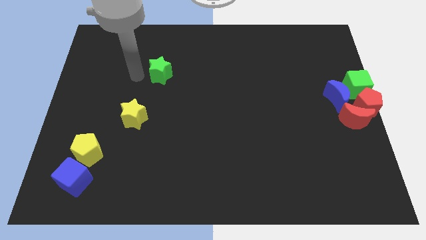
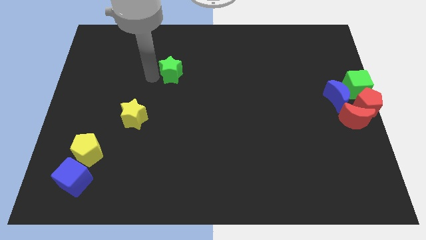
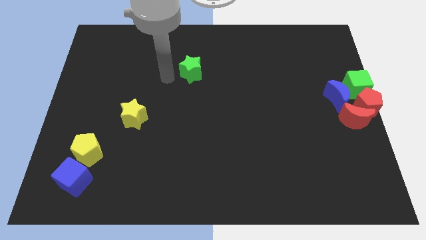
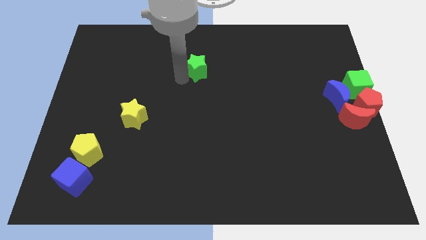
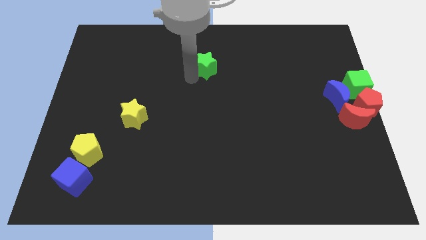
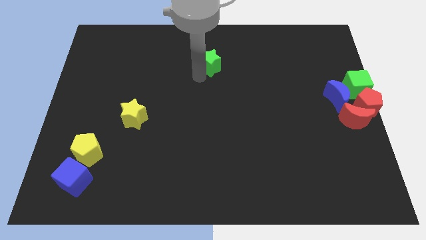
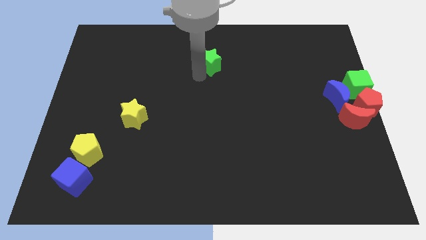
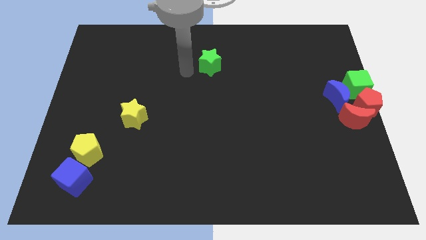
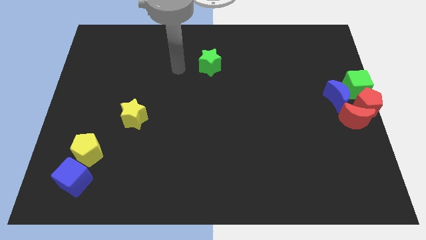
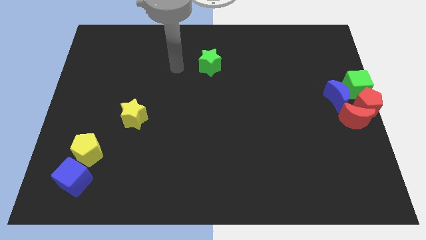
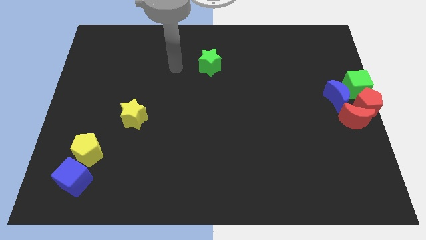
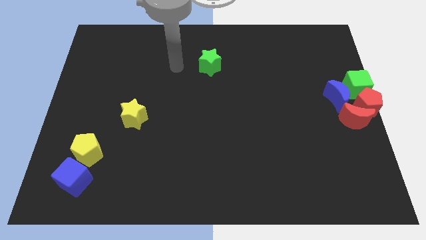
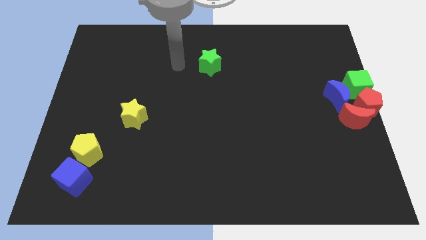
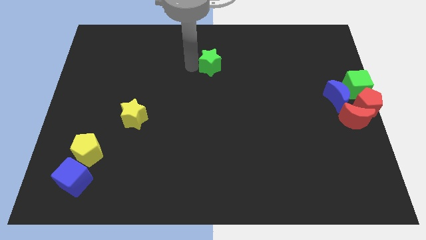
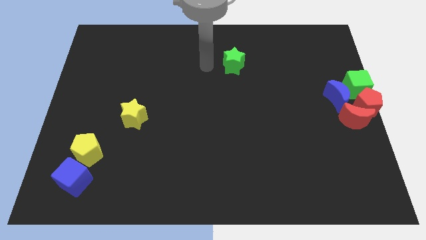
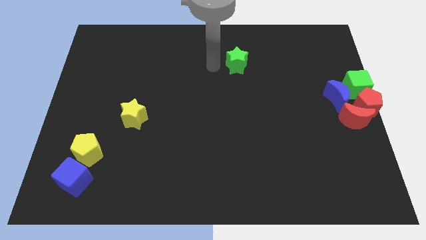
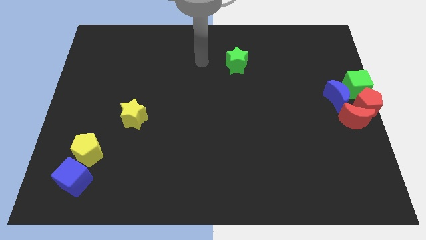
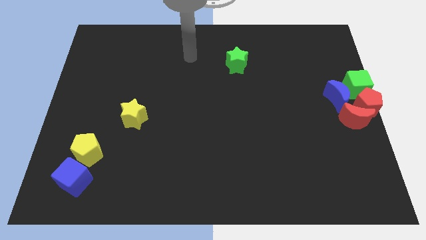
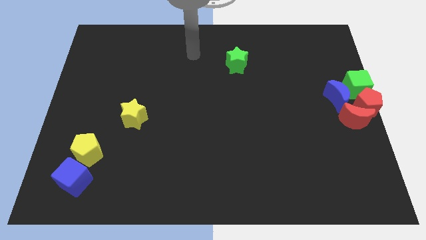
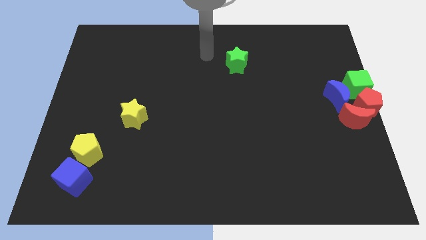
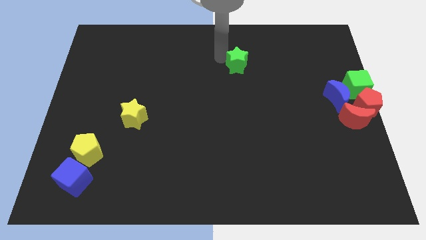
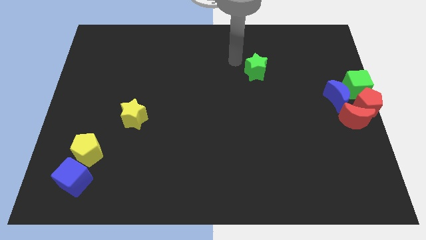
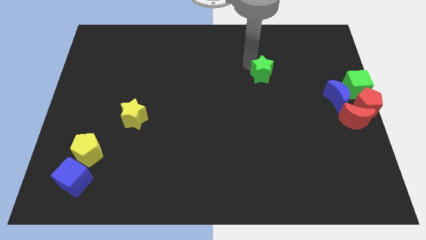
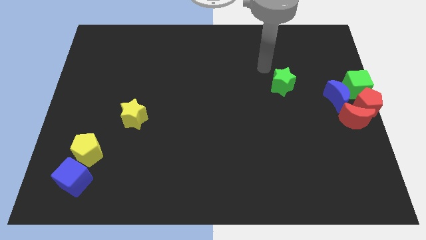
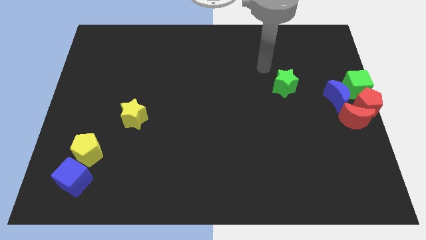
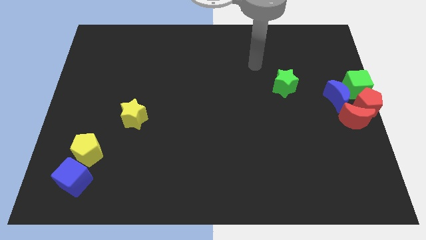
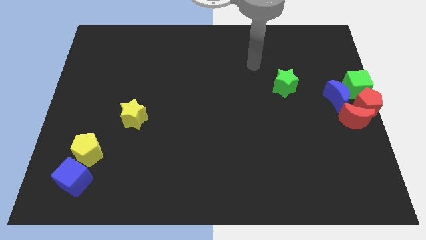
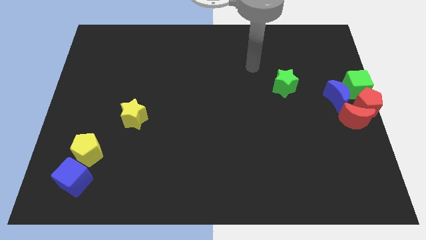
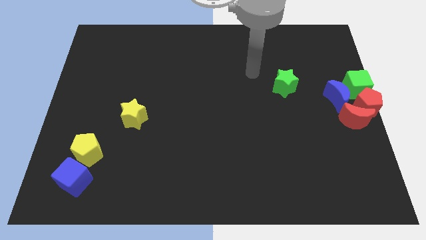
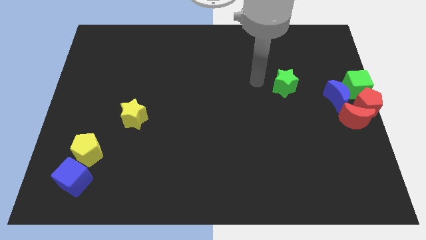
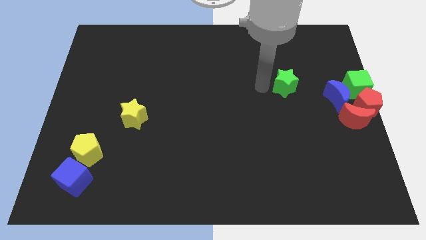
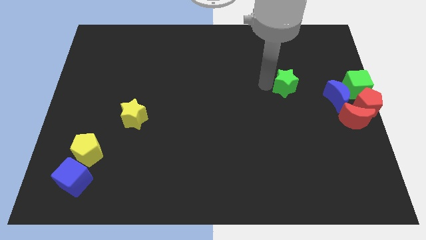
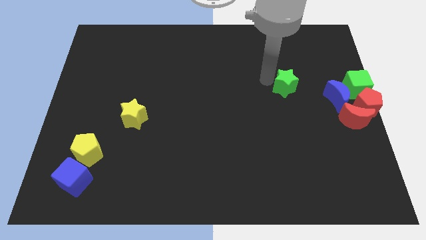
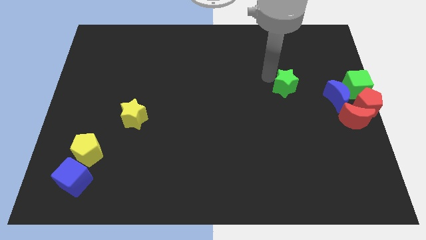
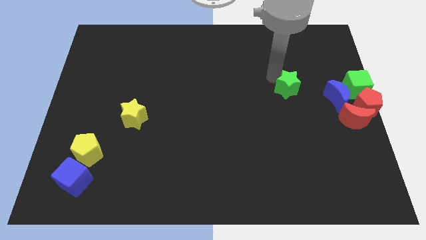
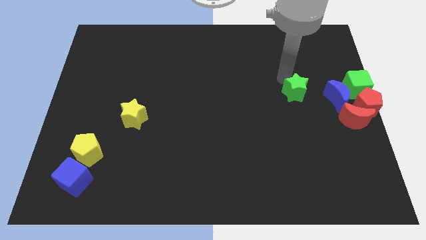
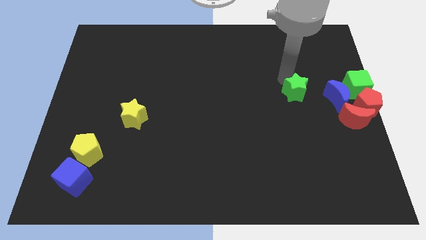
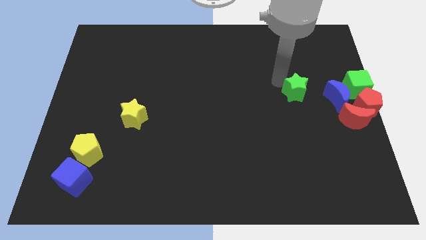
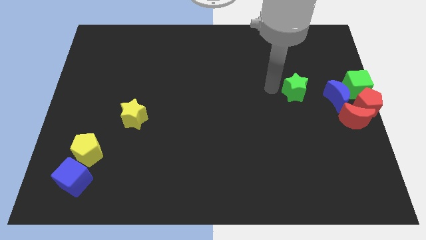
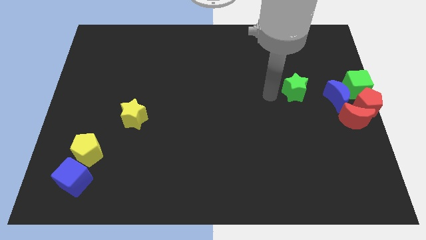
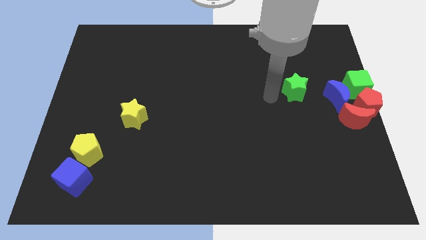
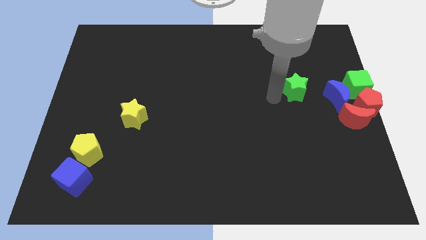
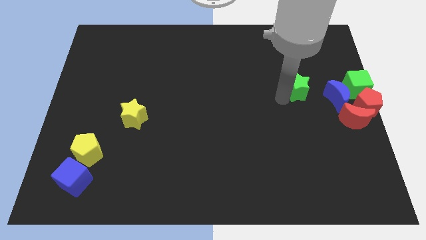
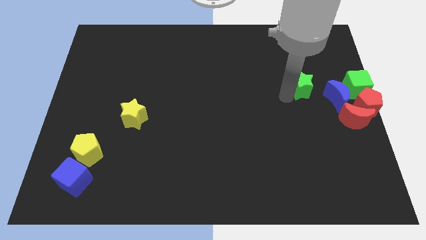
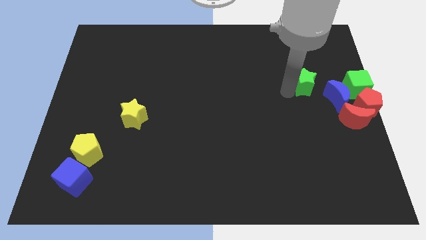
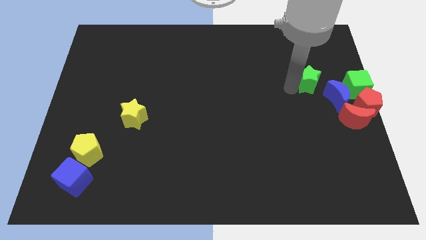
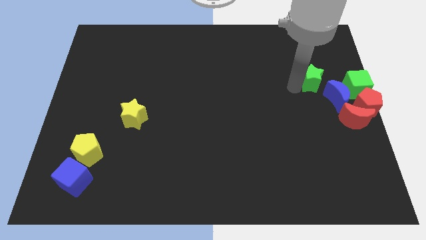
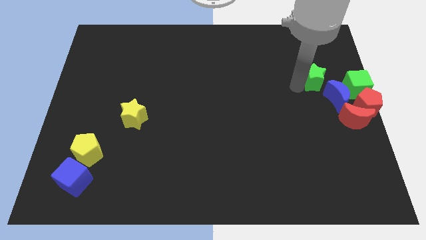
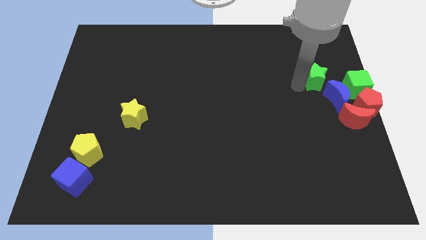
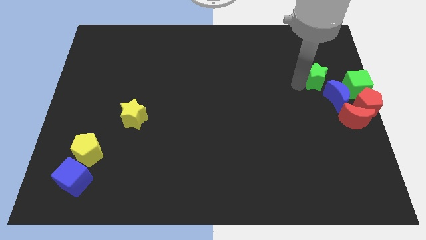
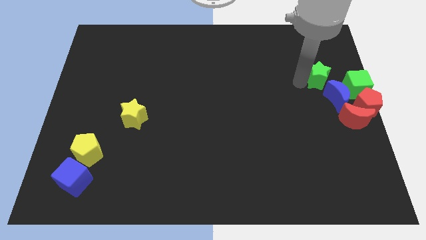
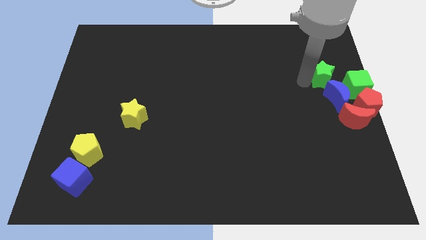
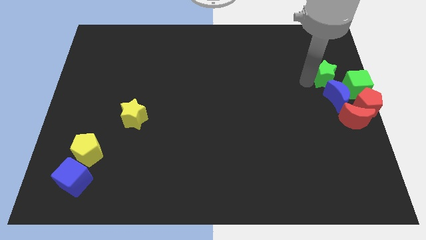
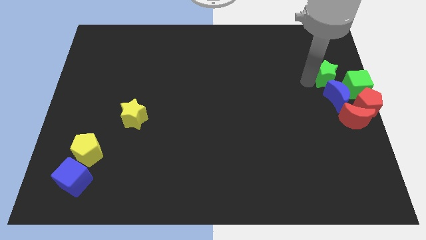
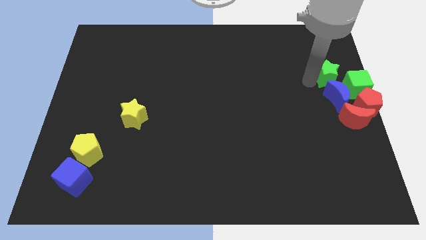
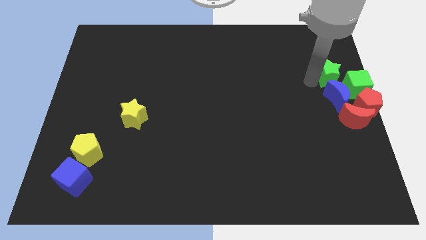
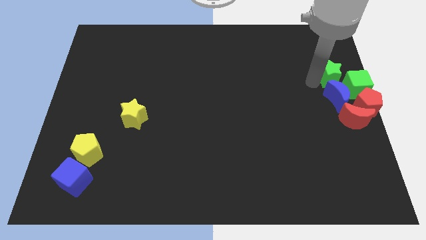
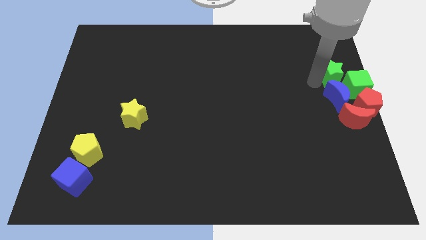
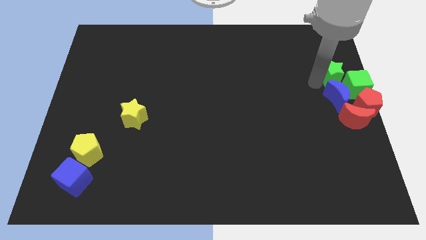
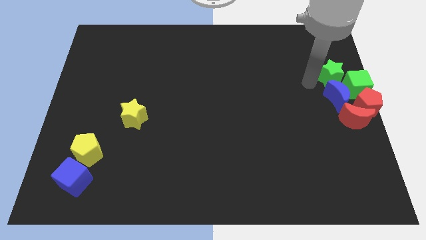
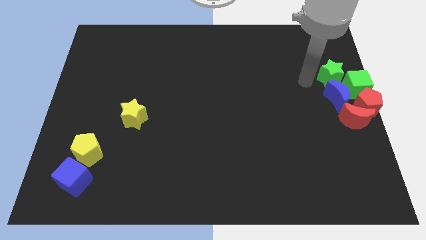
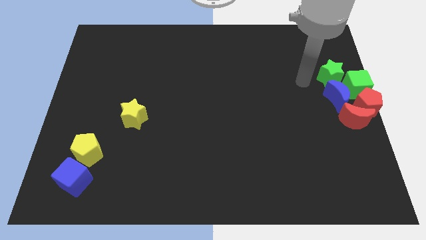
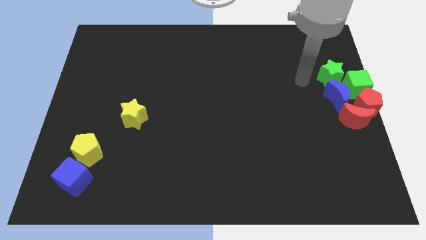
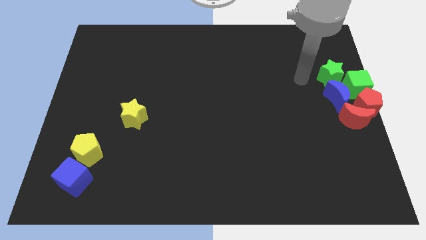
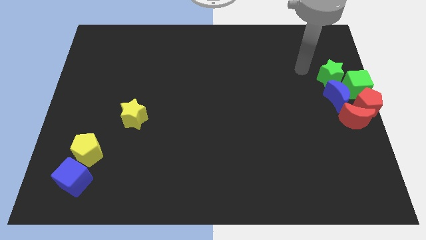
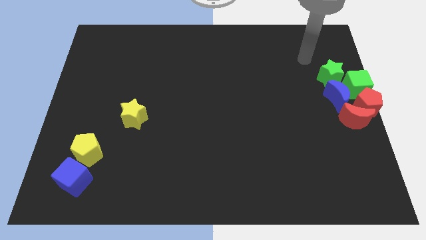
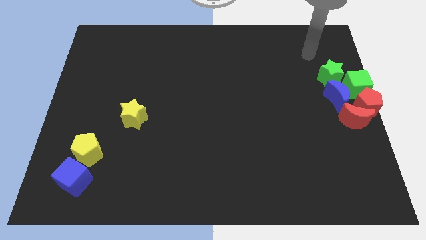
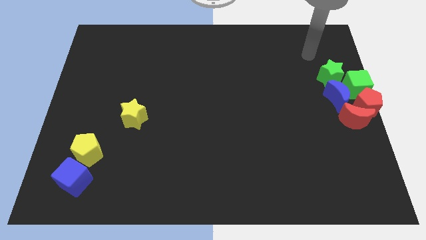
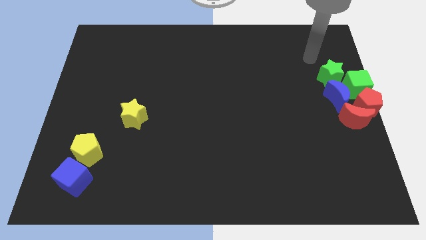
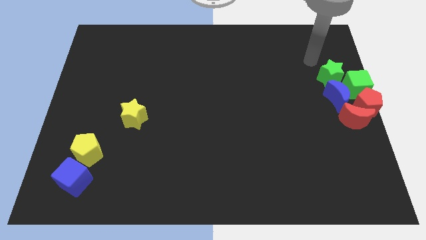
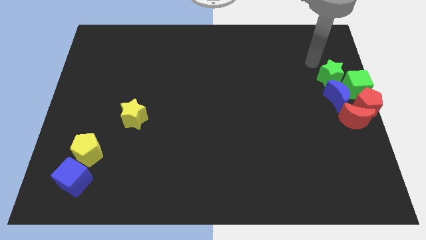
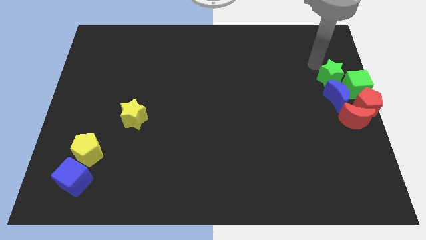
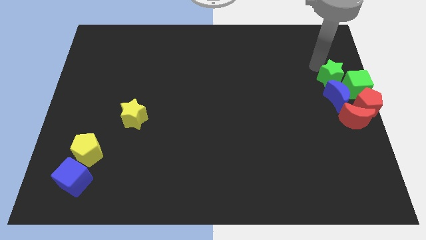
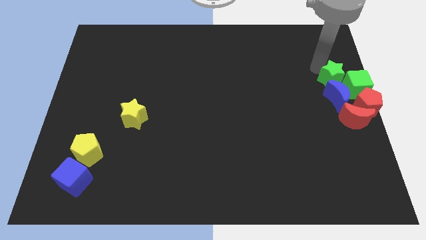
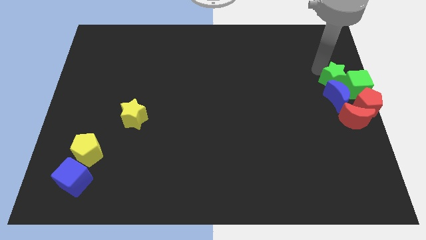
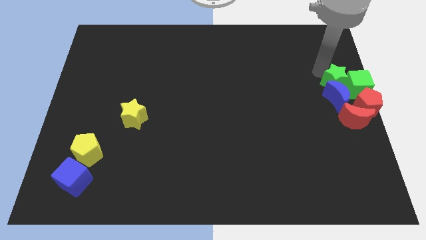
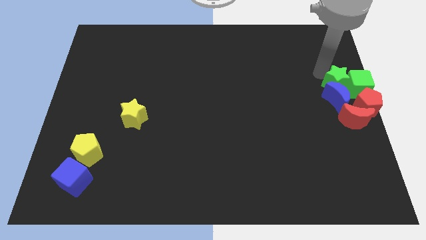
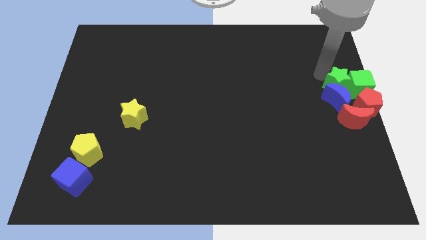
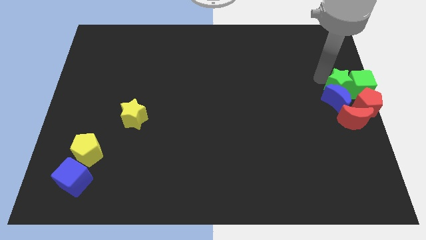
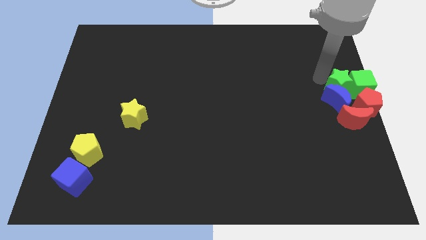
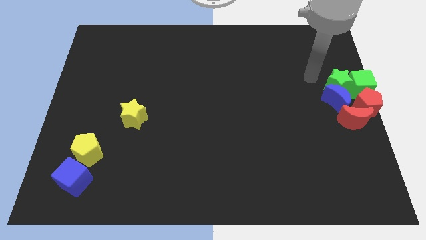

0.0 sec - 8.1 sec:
push the green star close to the group of blocks

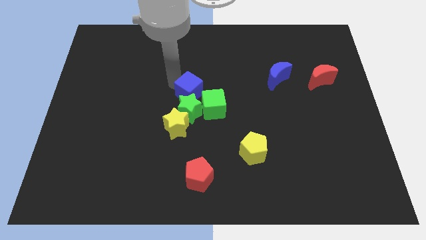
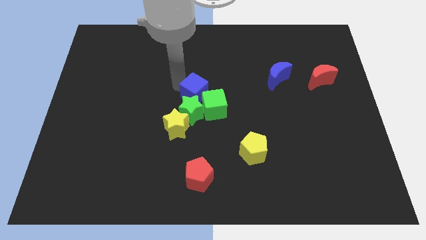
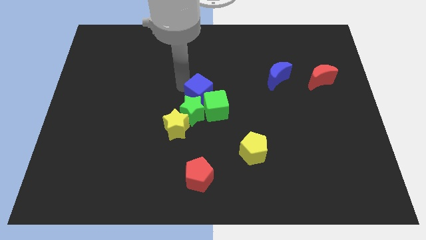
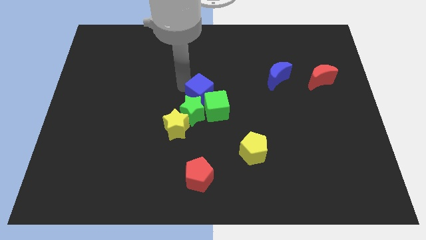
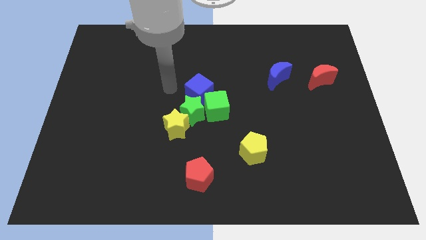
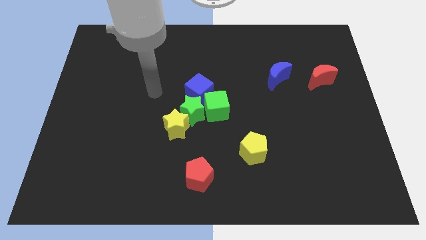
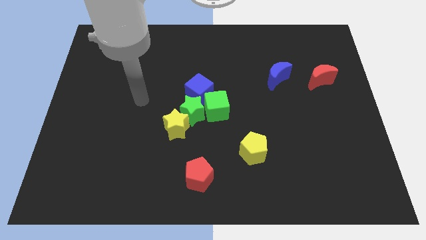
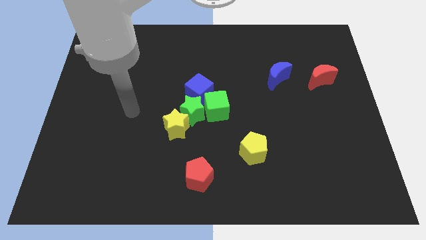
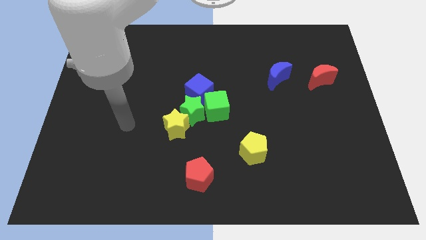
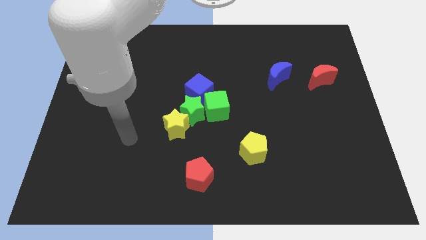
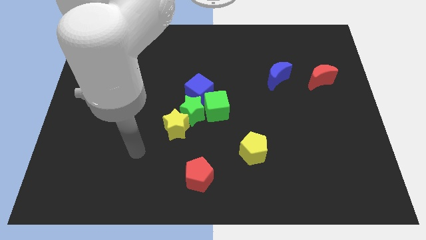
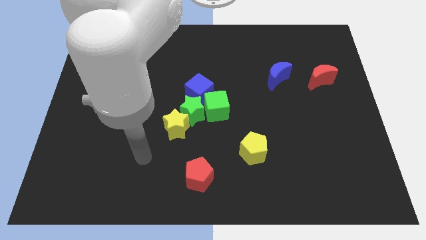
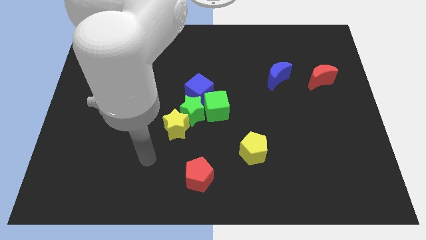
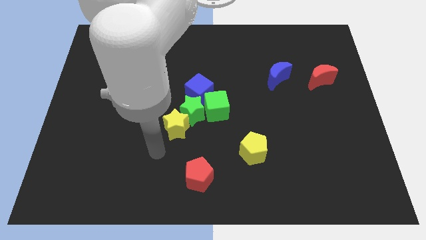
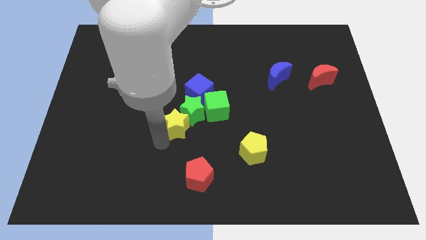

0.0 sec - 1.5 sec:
move your arm away from blue cube
